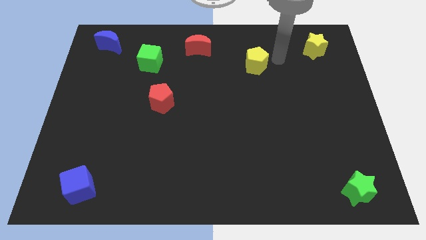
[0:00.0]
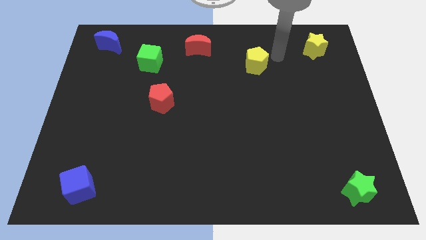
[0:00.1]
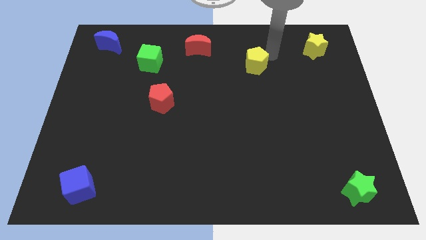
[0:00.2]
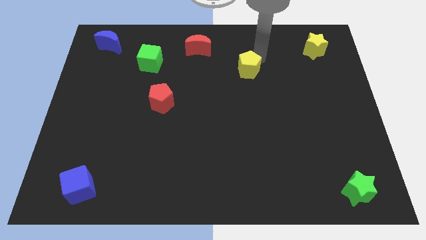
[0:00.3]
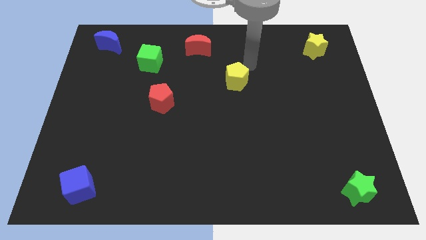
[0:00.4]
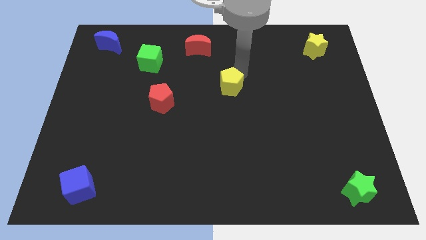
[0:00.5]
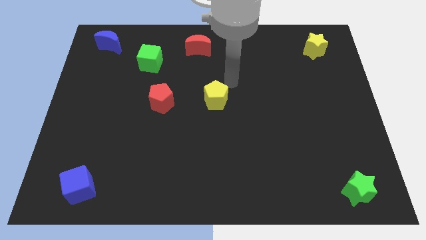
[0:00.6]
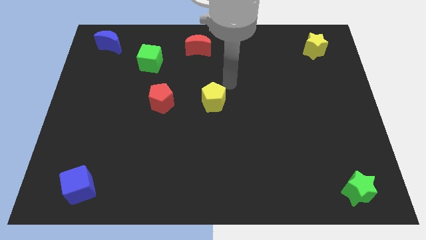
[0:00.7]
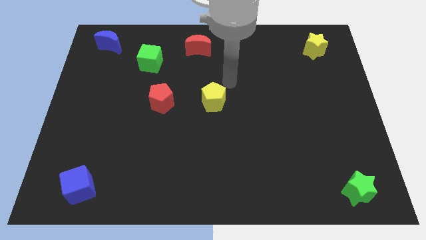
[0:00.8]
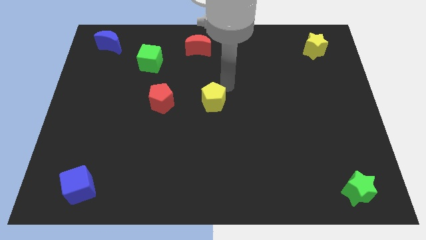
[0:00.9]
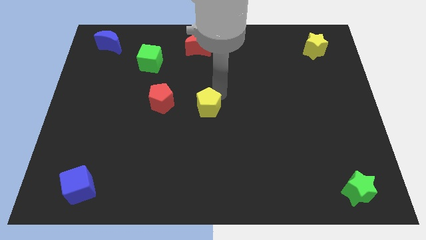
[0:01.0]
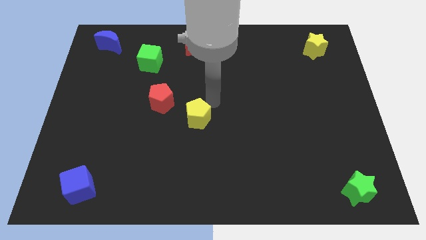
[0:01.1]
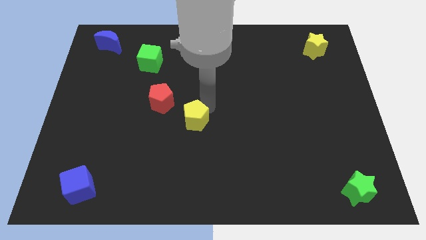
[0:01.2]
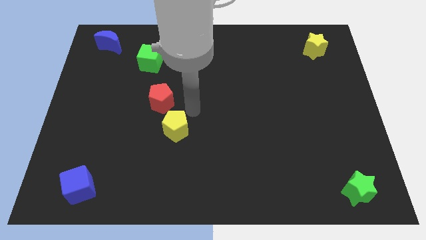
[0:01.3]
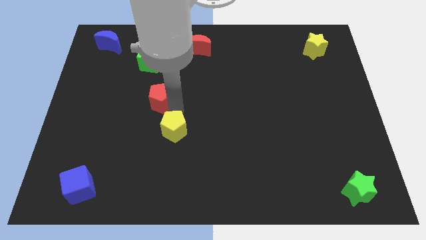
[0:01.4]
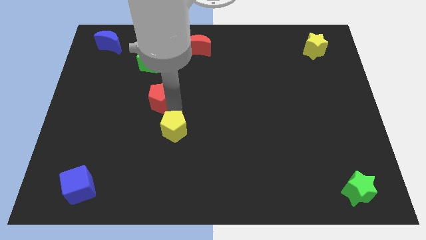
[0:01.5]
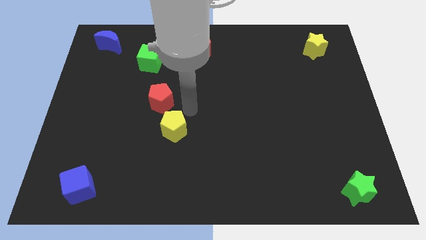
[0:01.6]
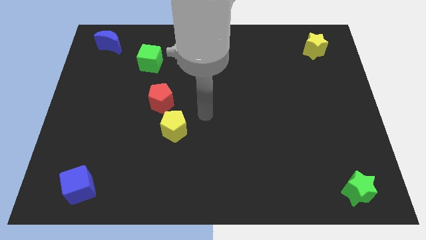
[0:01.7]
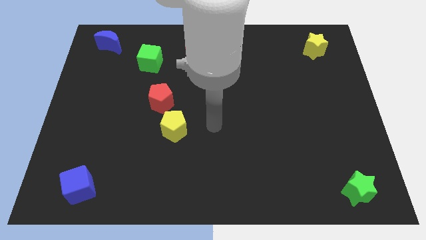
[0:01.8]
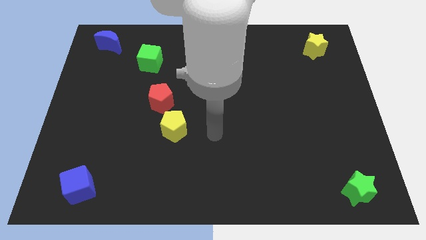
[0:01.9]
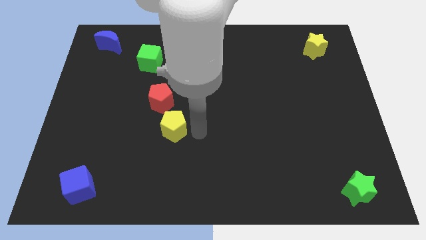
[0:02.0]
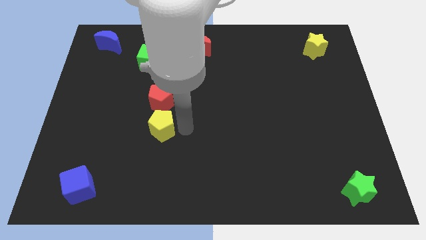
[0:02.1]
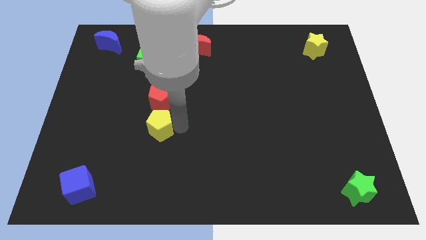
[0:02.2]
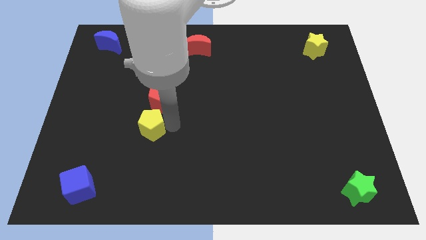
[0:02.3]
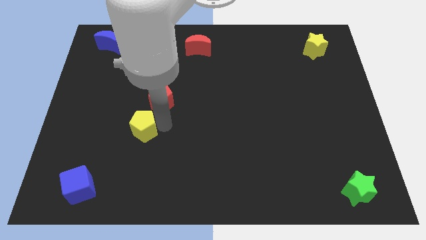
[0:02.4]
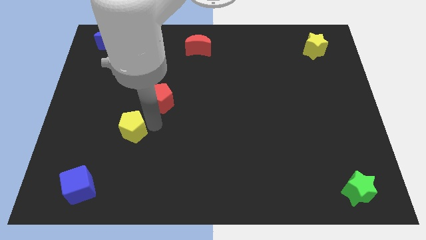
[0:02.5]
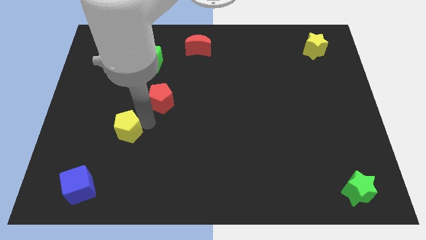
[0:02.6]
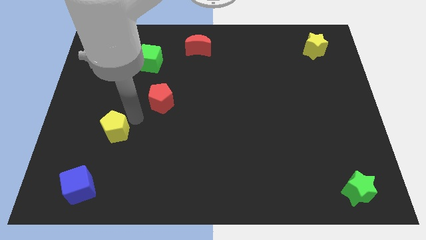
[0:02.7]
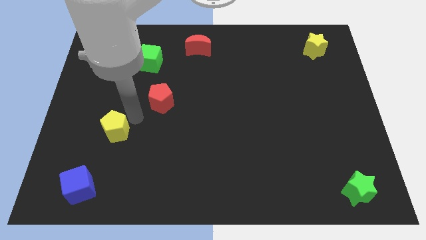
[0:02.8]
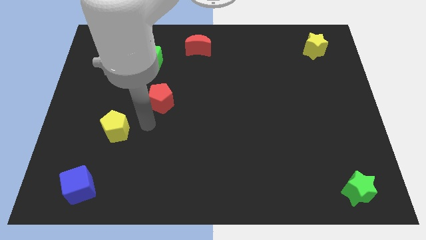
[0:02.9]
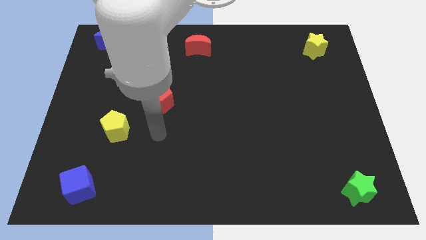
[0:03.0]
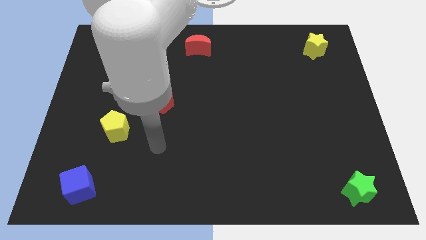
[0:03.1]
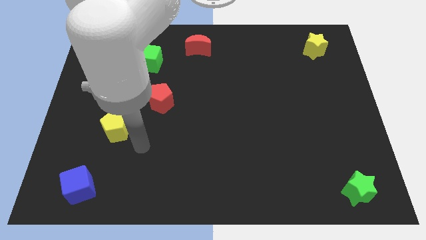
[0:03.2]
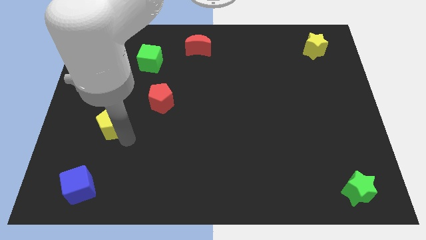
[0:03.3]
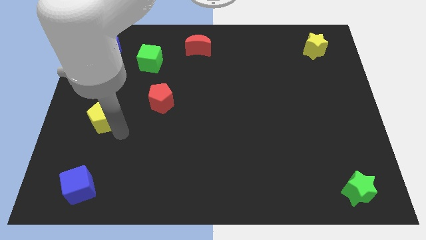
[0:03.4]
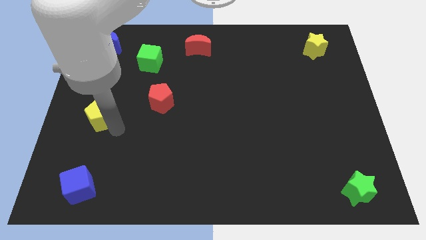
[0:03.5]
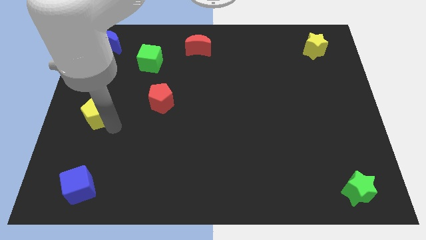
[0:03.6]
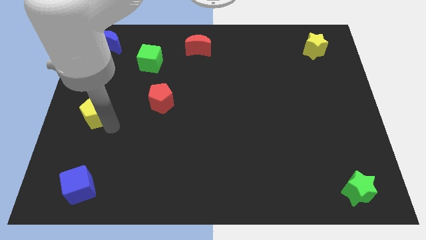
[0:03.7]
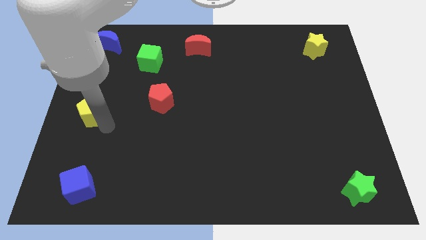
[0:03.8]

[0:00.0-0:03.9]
move the yellow pentagon towards the left center of the board

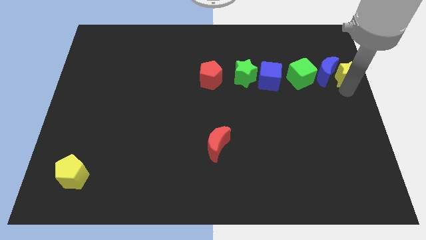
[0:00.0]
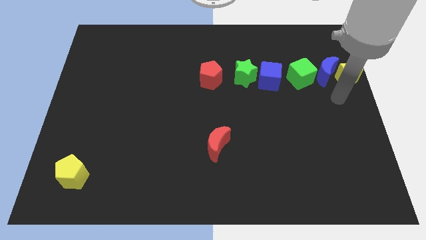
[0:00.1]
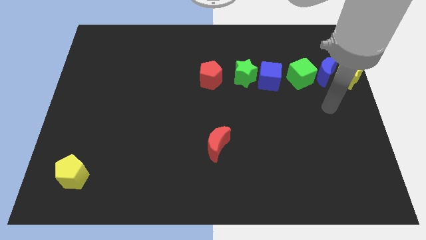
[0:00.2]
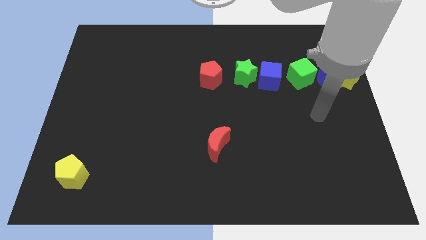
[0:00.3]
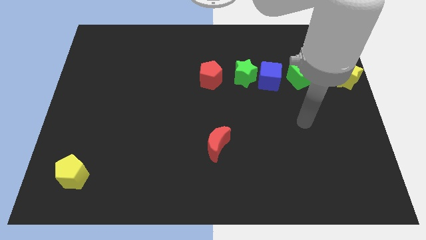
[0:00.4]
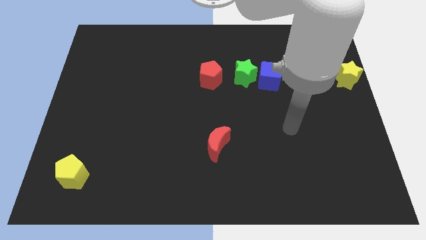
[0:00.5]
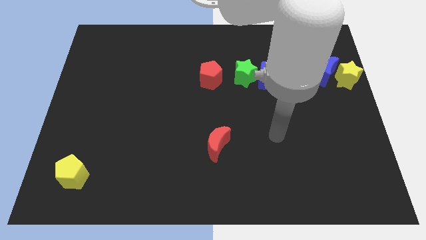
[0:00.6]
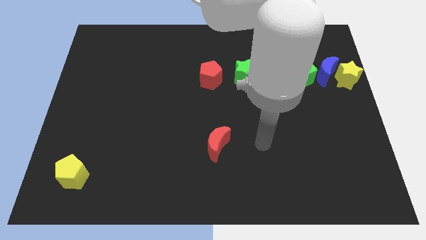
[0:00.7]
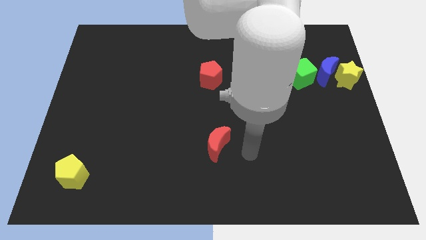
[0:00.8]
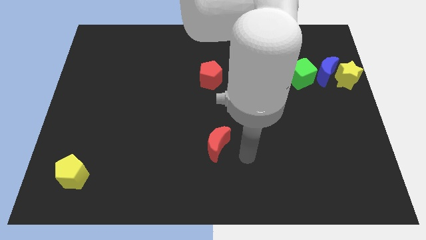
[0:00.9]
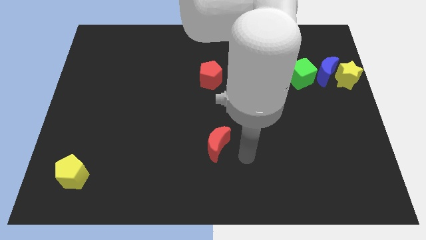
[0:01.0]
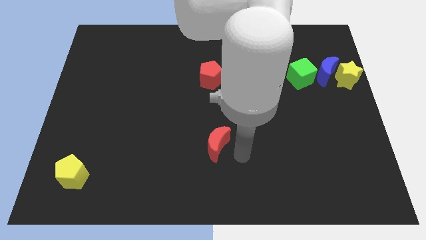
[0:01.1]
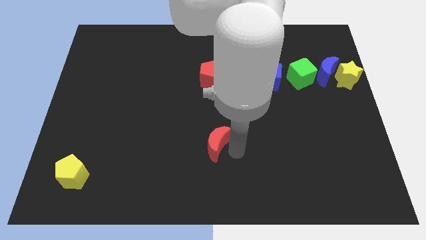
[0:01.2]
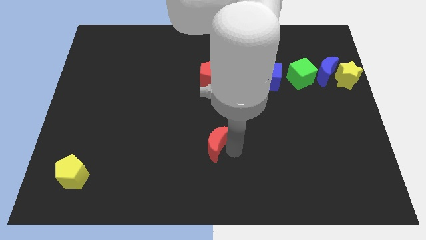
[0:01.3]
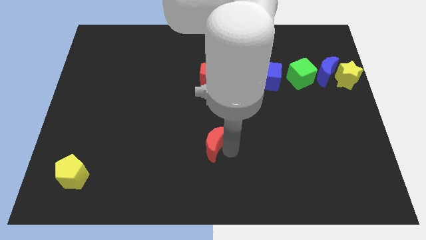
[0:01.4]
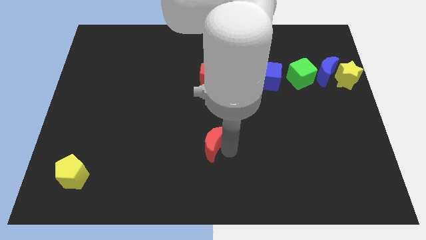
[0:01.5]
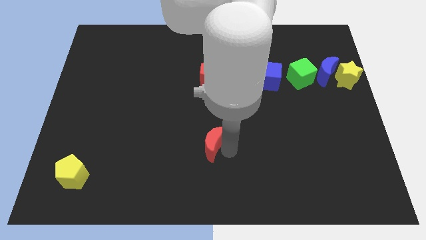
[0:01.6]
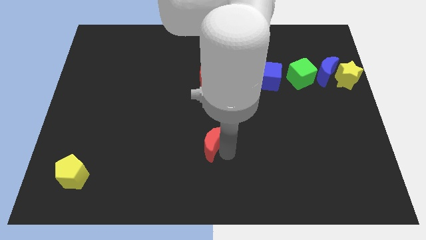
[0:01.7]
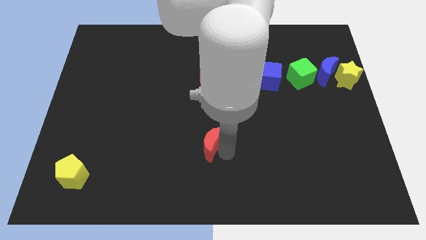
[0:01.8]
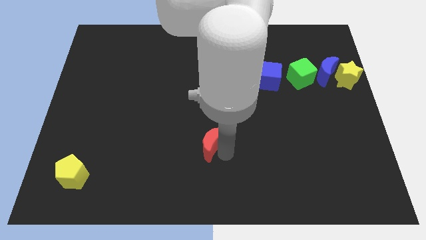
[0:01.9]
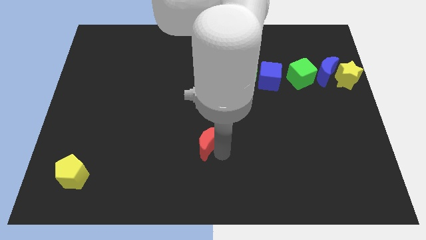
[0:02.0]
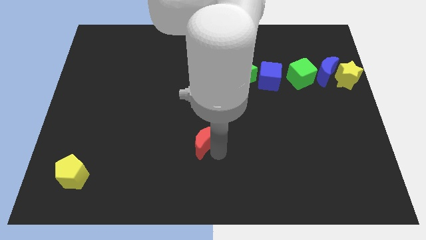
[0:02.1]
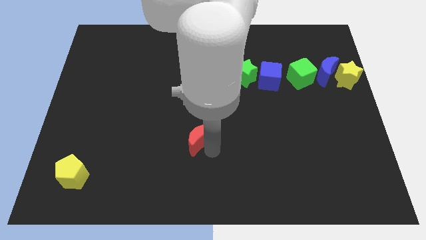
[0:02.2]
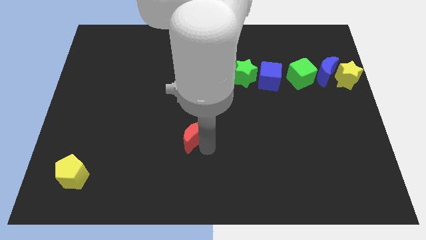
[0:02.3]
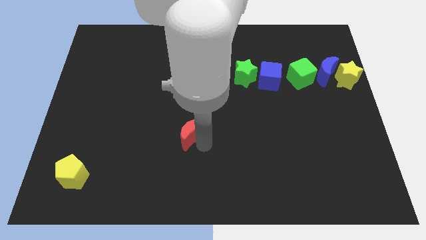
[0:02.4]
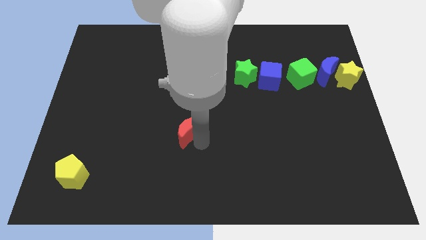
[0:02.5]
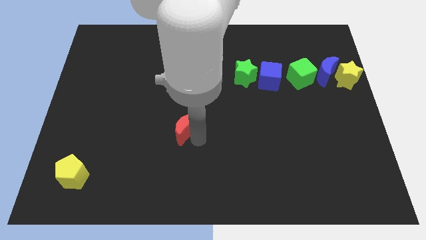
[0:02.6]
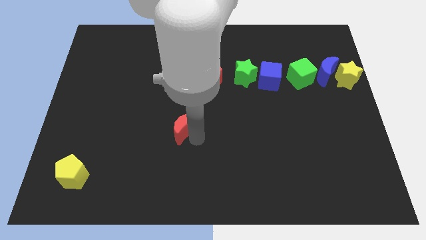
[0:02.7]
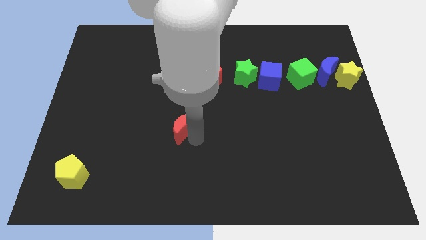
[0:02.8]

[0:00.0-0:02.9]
move the red crescent slightly to the left

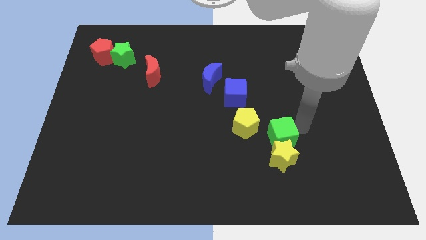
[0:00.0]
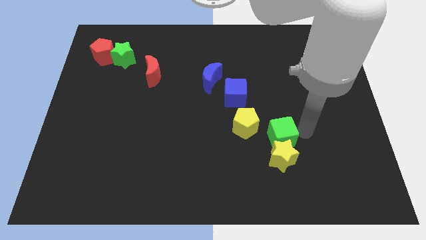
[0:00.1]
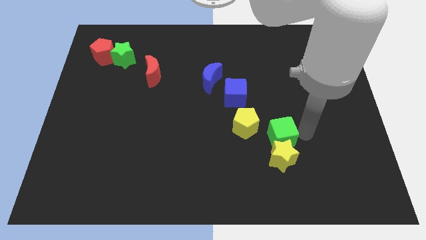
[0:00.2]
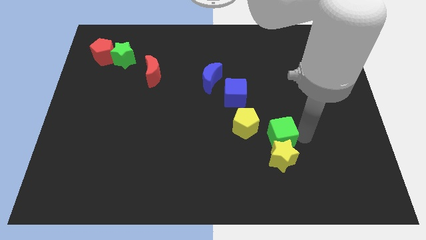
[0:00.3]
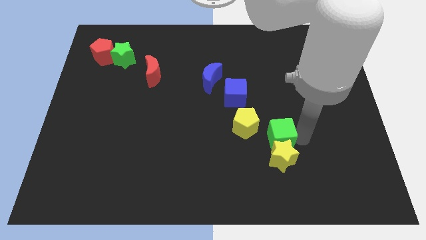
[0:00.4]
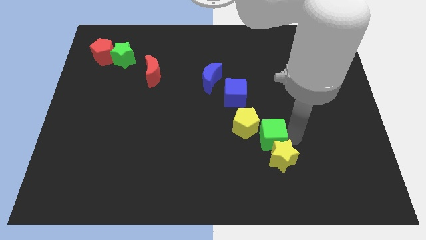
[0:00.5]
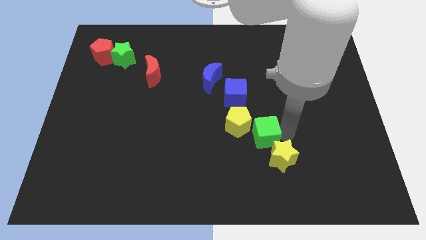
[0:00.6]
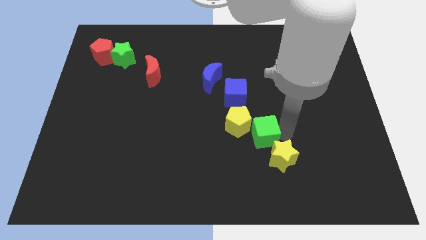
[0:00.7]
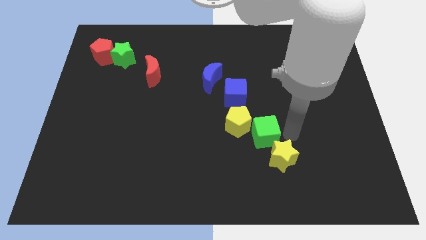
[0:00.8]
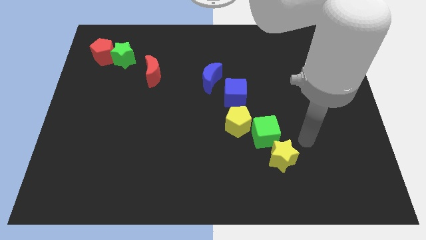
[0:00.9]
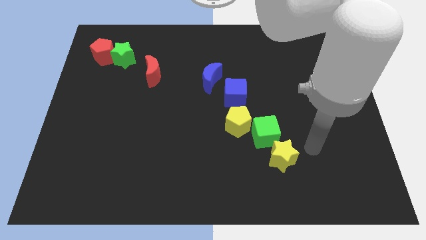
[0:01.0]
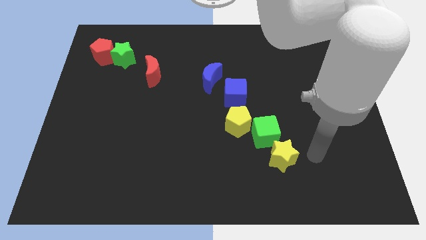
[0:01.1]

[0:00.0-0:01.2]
push the green cube into the yellow pentagon

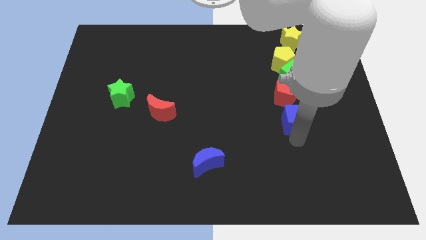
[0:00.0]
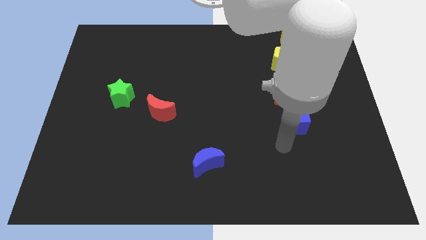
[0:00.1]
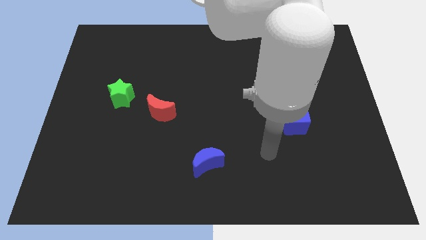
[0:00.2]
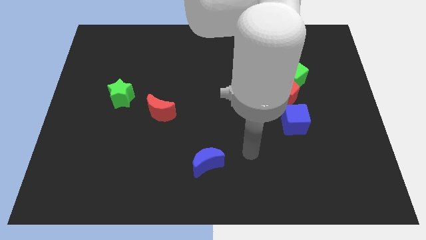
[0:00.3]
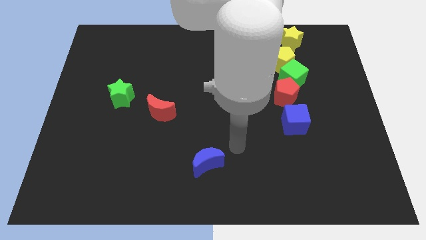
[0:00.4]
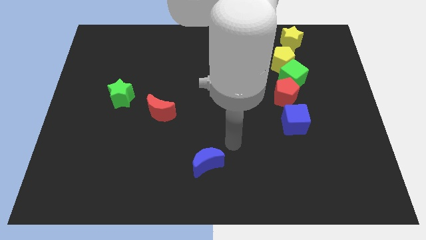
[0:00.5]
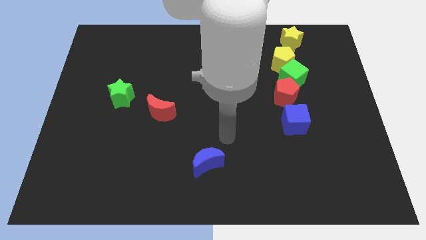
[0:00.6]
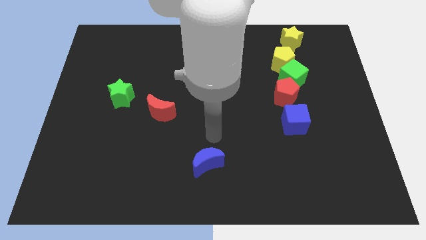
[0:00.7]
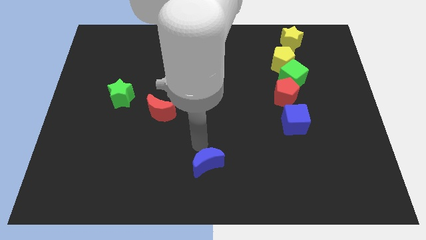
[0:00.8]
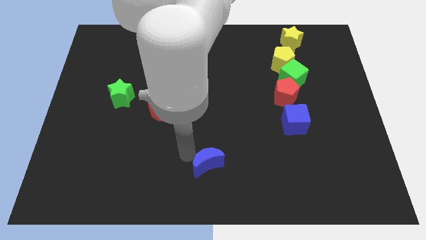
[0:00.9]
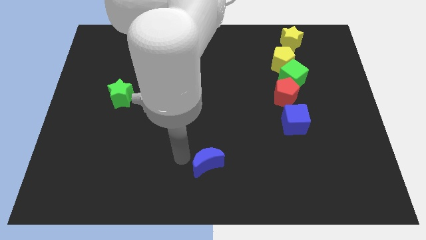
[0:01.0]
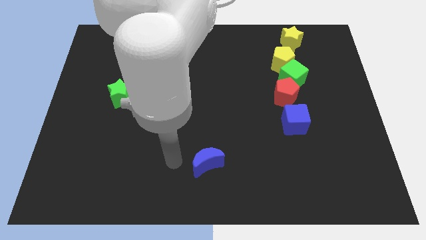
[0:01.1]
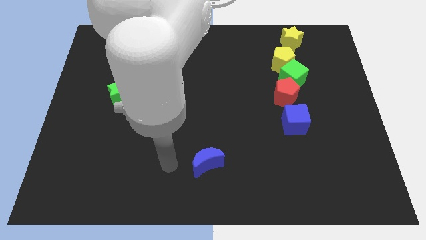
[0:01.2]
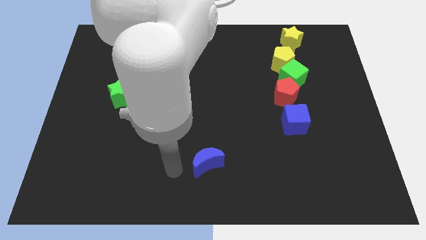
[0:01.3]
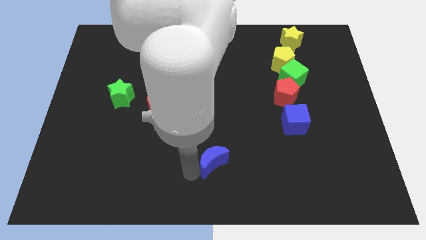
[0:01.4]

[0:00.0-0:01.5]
touch the bottom of the blue moon
